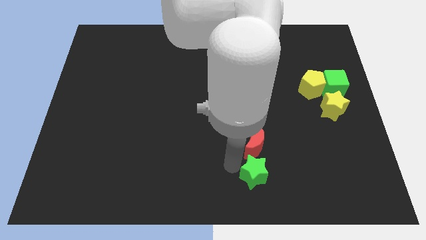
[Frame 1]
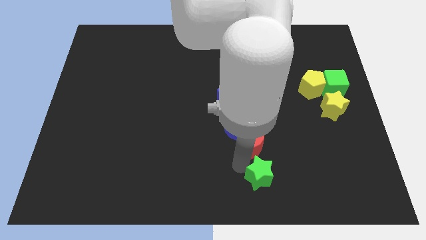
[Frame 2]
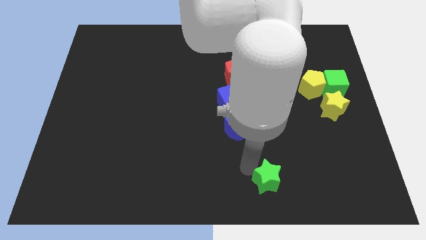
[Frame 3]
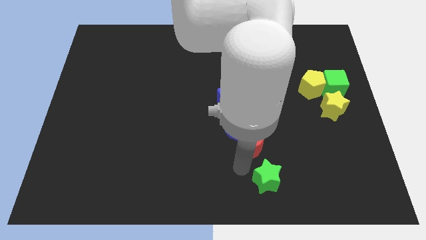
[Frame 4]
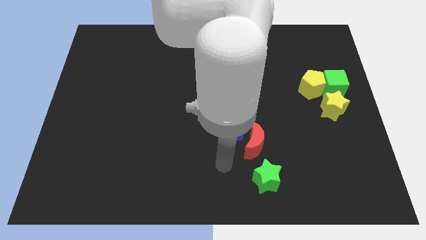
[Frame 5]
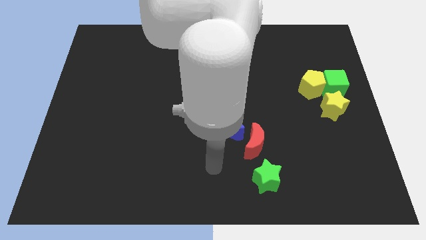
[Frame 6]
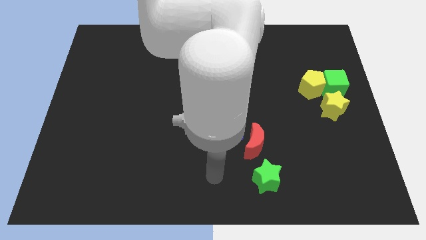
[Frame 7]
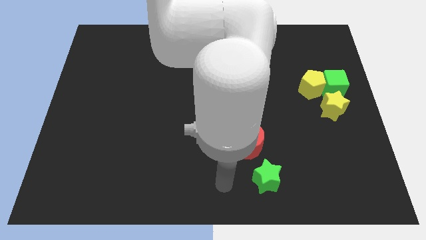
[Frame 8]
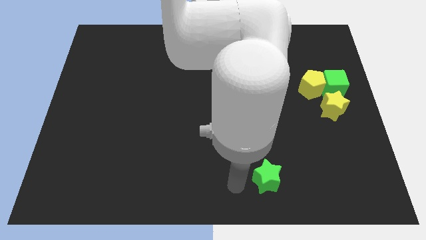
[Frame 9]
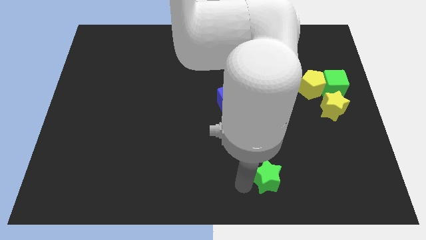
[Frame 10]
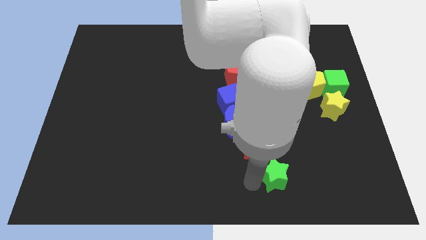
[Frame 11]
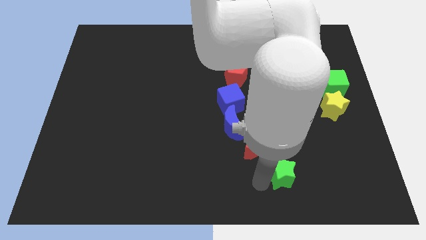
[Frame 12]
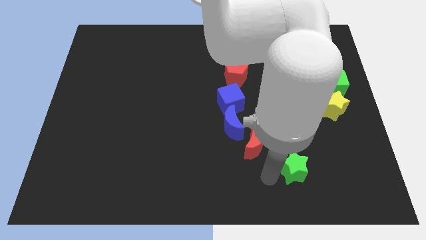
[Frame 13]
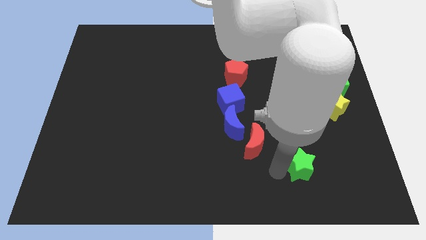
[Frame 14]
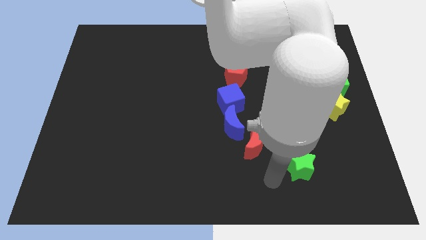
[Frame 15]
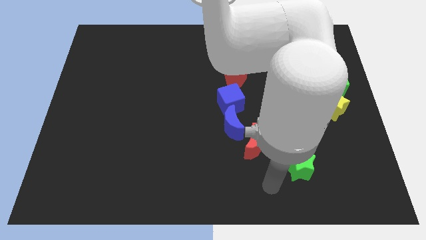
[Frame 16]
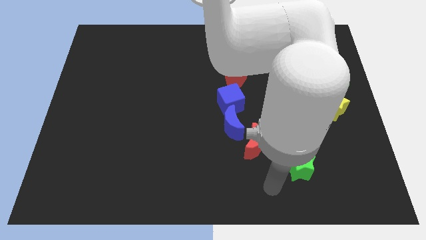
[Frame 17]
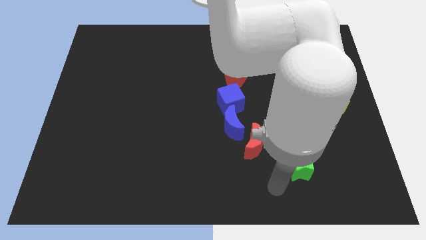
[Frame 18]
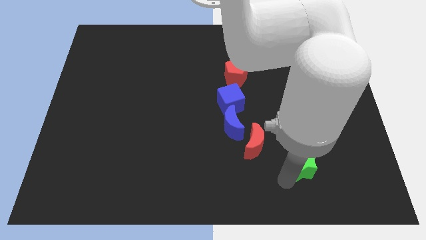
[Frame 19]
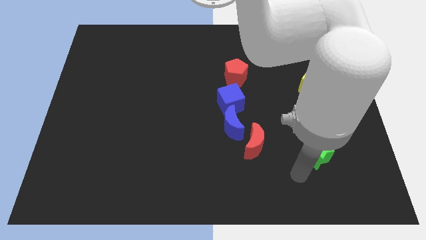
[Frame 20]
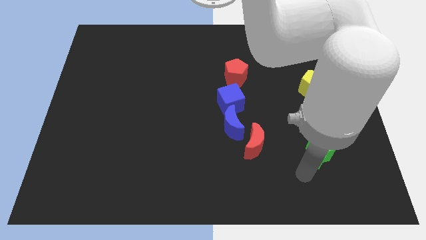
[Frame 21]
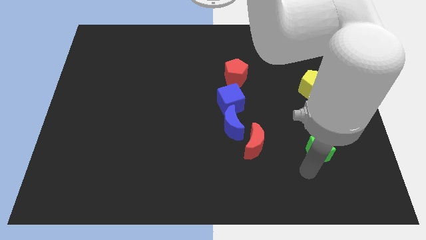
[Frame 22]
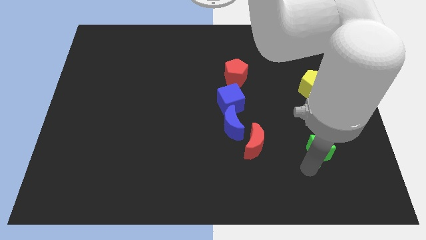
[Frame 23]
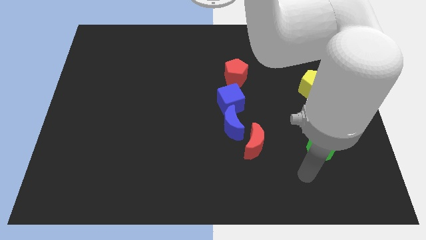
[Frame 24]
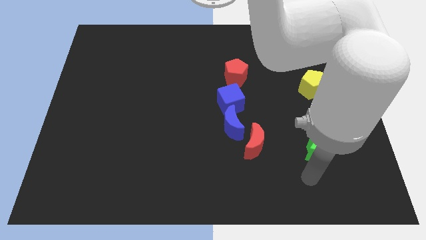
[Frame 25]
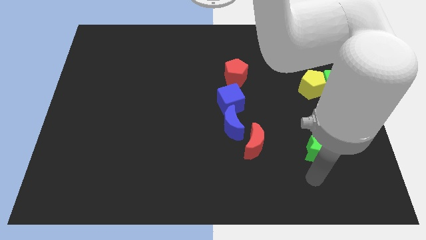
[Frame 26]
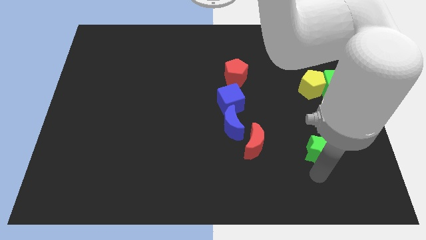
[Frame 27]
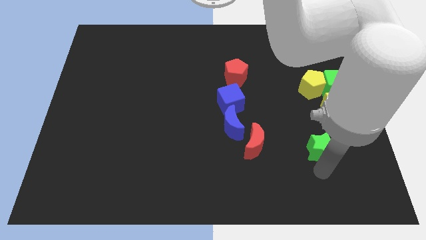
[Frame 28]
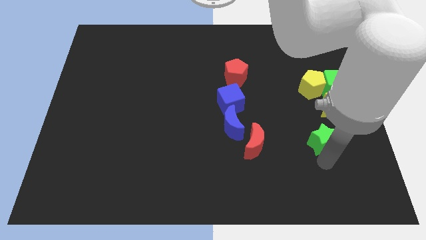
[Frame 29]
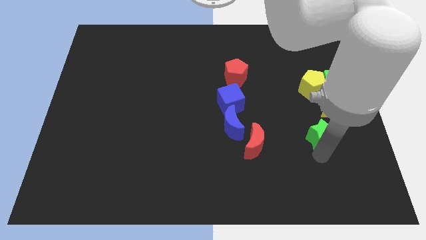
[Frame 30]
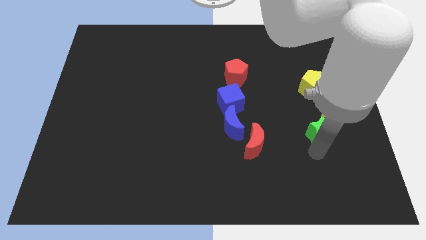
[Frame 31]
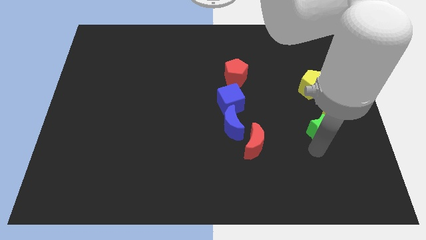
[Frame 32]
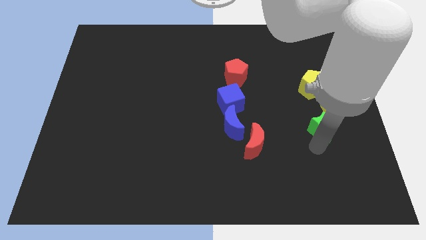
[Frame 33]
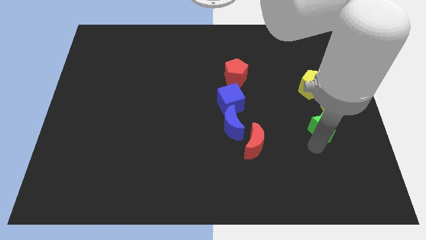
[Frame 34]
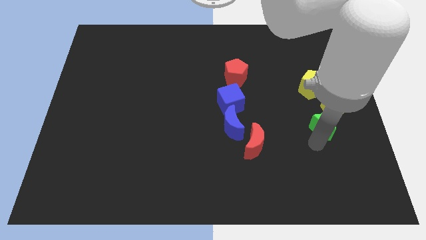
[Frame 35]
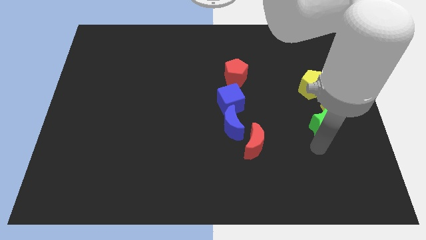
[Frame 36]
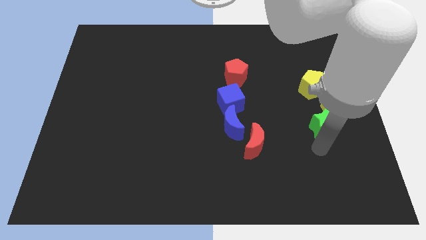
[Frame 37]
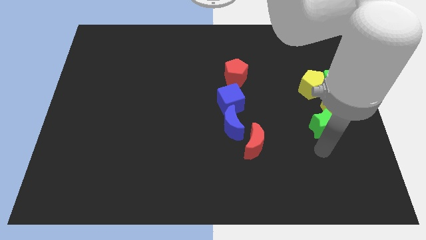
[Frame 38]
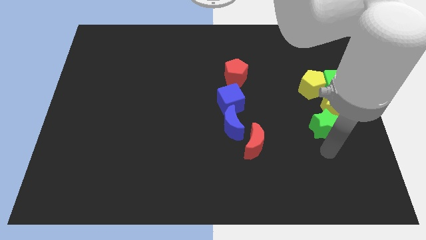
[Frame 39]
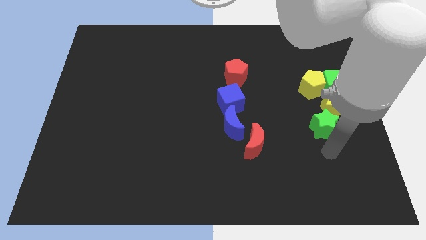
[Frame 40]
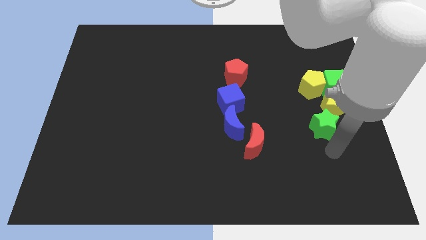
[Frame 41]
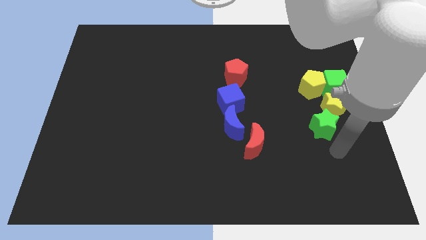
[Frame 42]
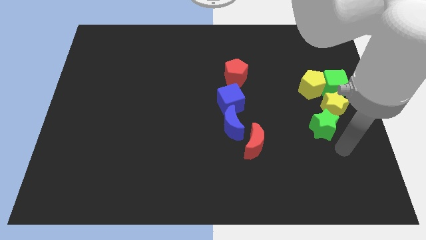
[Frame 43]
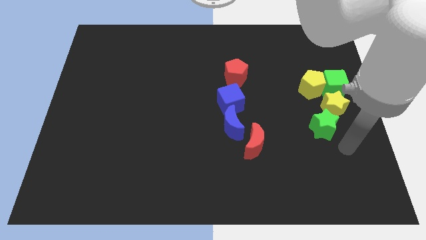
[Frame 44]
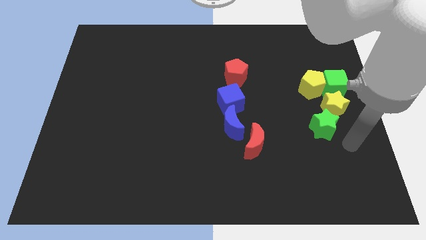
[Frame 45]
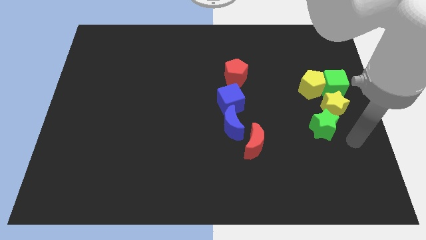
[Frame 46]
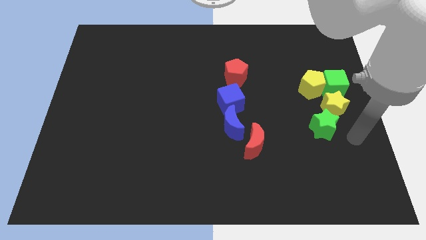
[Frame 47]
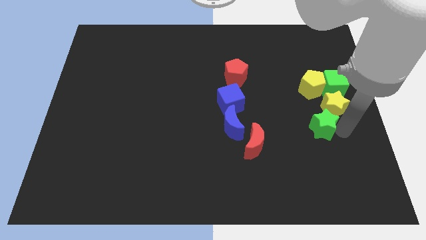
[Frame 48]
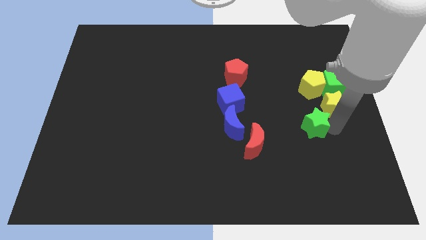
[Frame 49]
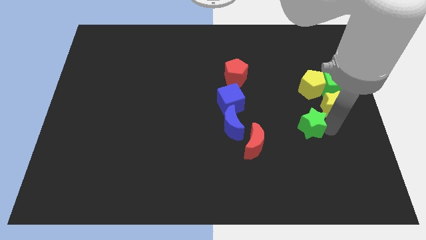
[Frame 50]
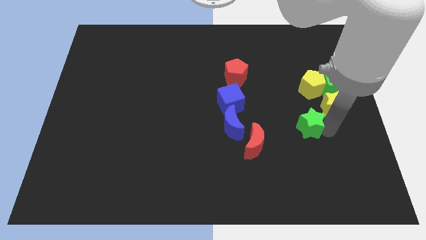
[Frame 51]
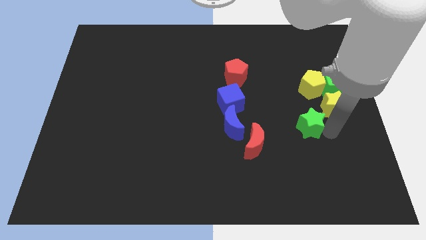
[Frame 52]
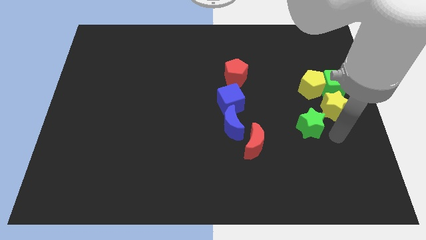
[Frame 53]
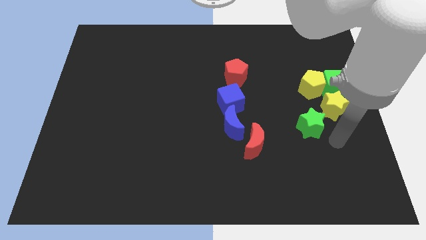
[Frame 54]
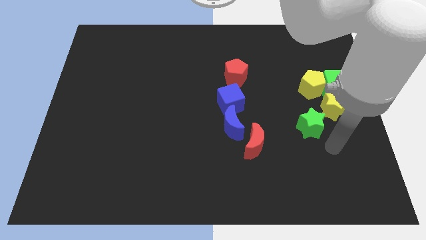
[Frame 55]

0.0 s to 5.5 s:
move the green star to the bottom left of the yellow star

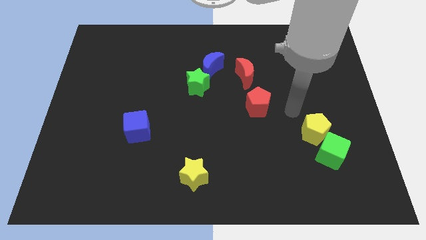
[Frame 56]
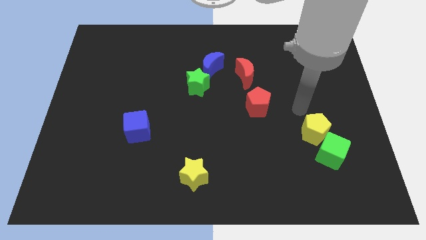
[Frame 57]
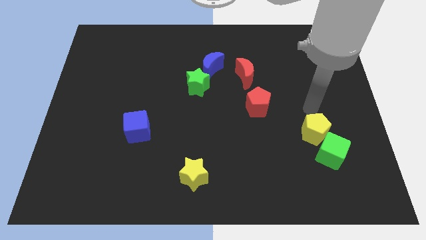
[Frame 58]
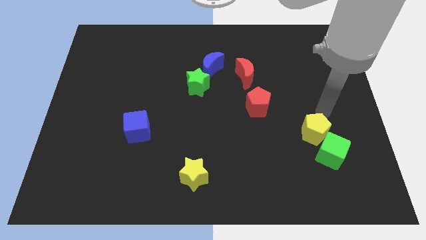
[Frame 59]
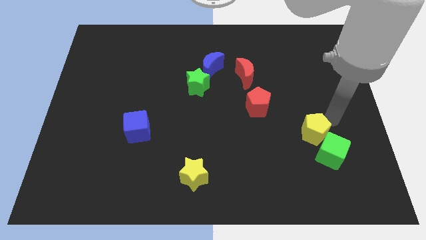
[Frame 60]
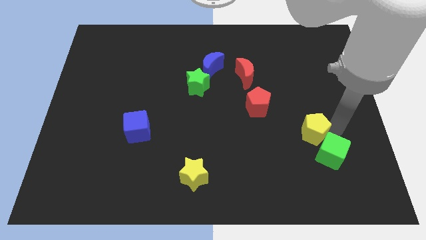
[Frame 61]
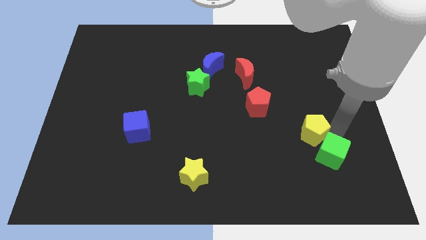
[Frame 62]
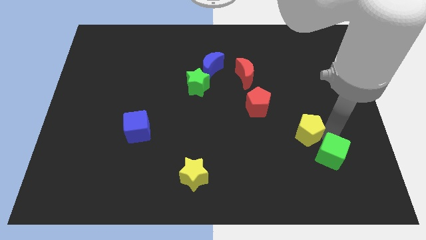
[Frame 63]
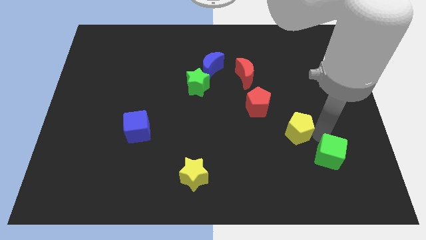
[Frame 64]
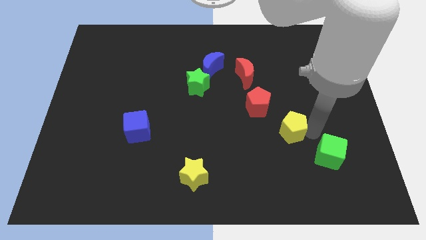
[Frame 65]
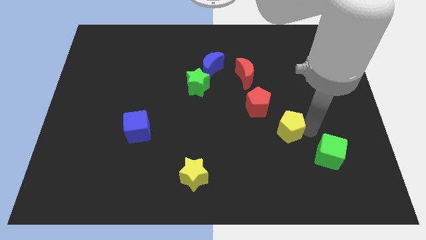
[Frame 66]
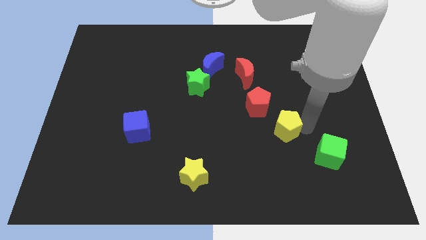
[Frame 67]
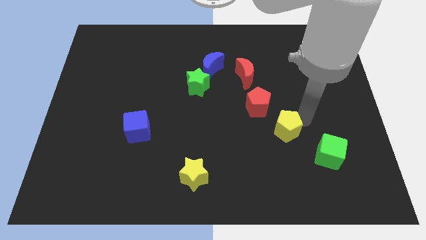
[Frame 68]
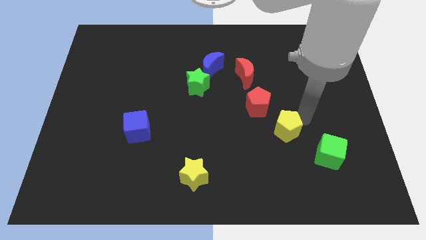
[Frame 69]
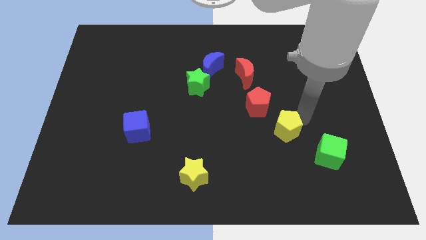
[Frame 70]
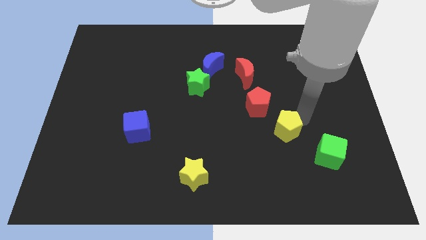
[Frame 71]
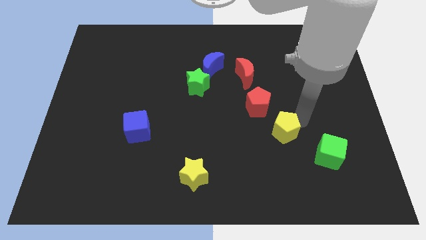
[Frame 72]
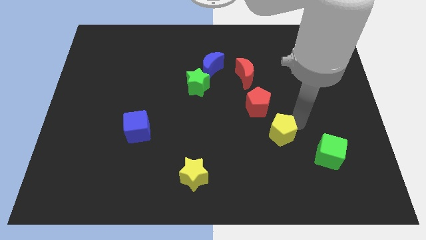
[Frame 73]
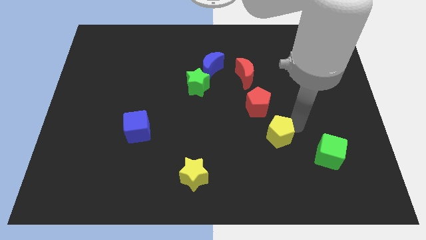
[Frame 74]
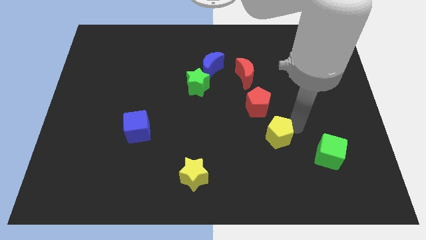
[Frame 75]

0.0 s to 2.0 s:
separate the yellow pentagon from the green cube

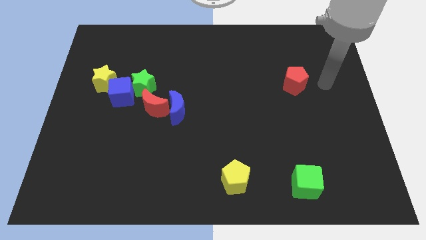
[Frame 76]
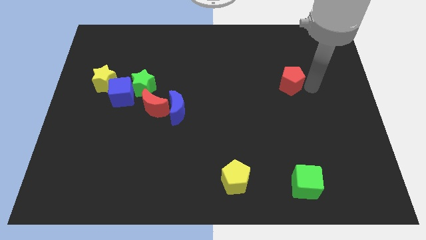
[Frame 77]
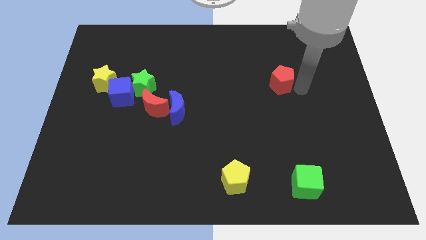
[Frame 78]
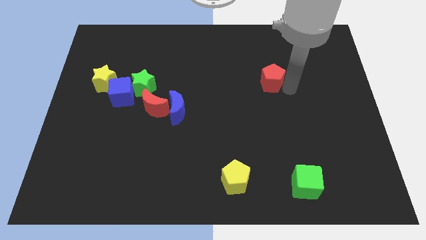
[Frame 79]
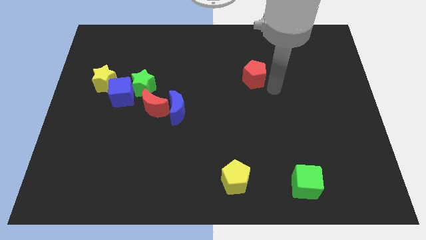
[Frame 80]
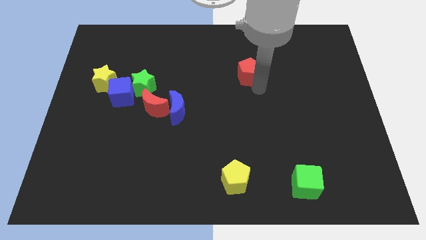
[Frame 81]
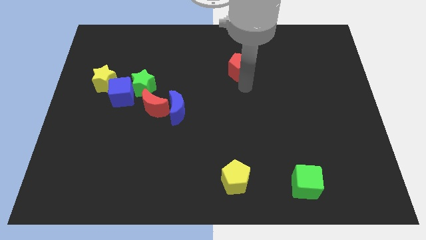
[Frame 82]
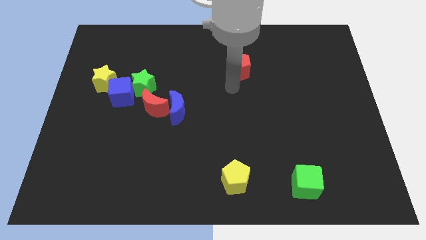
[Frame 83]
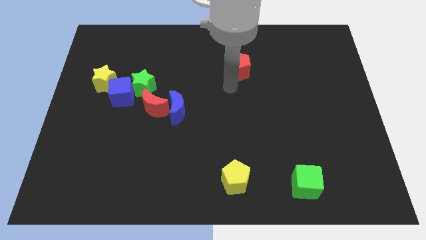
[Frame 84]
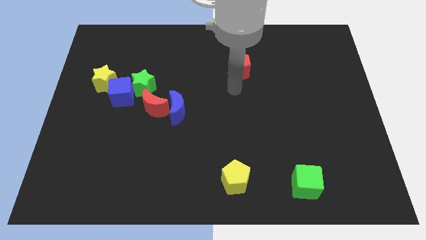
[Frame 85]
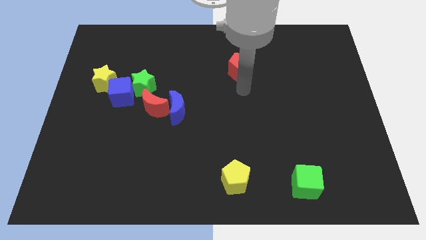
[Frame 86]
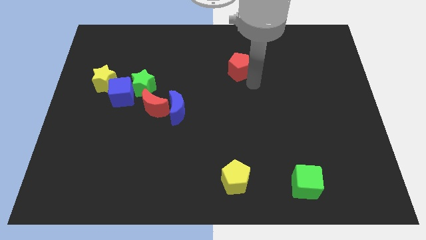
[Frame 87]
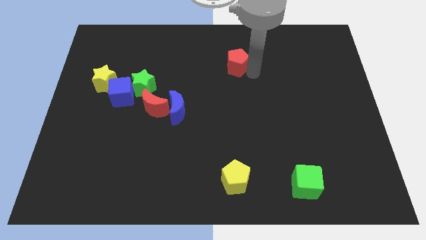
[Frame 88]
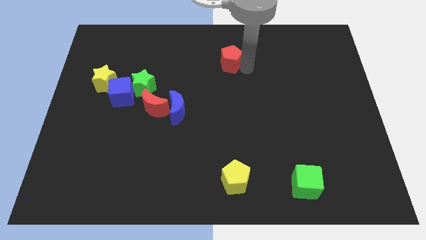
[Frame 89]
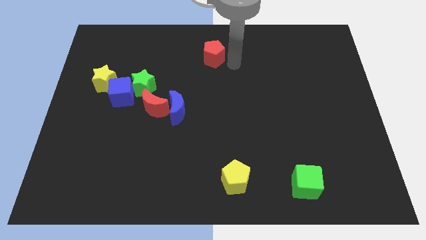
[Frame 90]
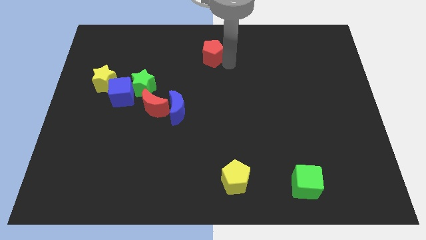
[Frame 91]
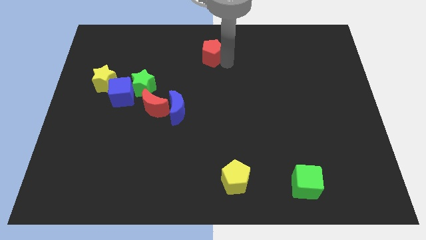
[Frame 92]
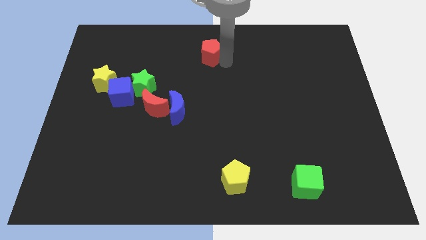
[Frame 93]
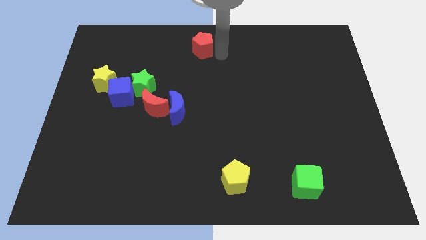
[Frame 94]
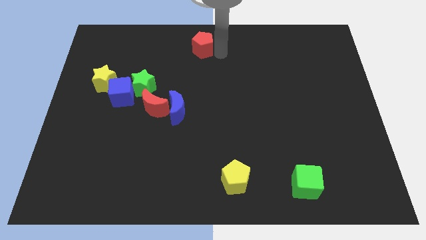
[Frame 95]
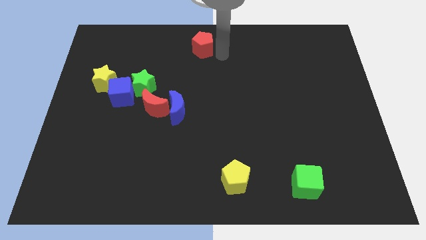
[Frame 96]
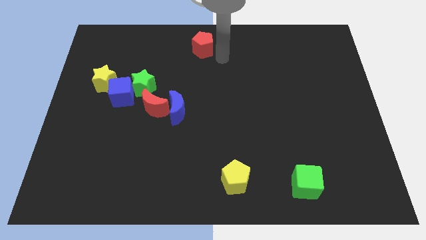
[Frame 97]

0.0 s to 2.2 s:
move the red pentagon to the top center of the board
